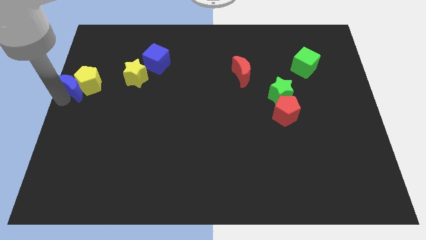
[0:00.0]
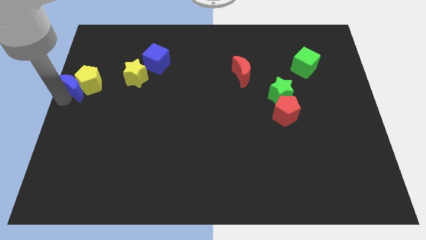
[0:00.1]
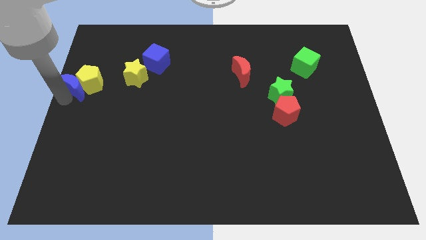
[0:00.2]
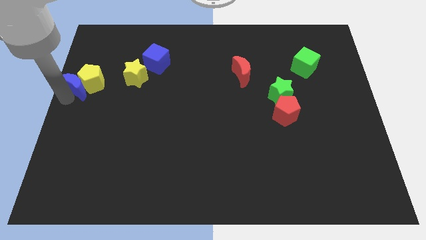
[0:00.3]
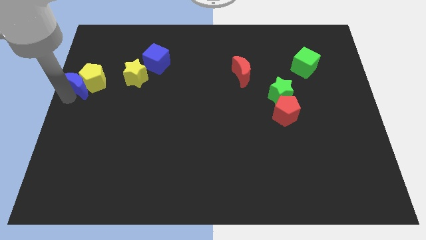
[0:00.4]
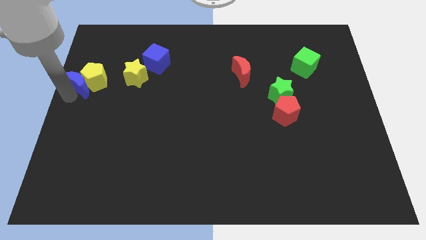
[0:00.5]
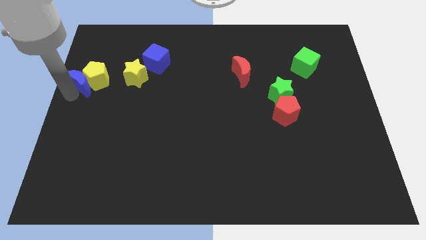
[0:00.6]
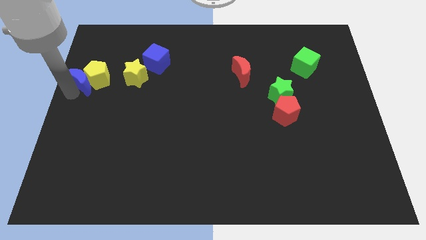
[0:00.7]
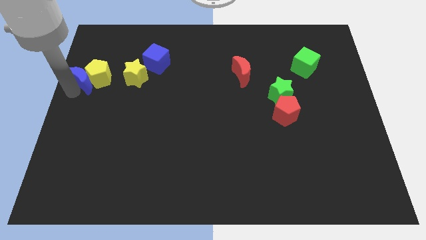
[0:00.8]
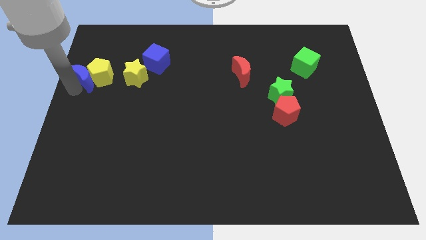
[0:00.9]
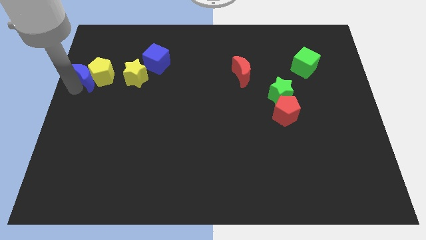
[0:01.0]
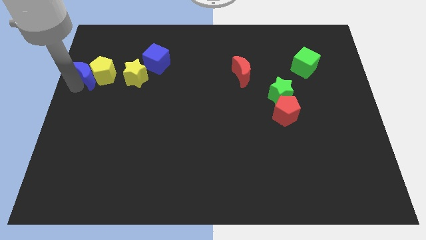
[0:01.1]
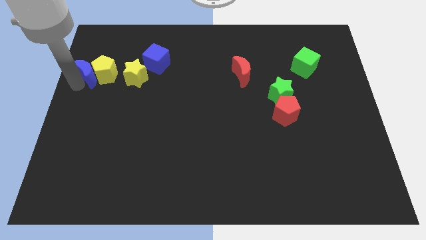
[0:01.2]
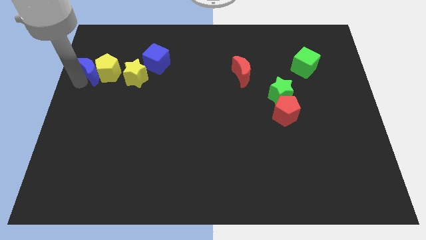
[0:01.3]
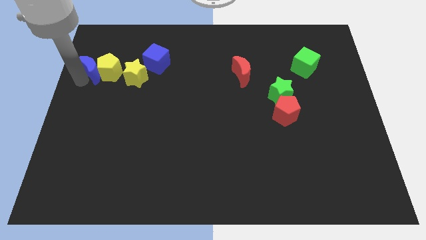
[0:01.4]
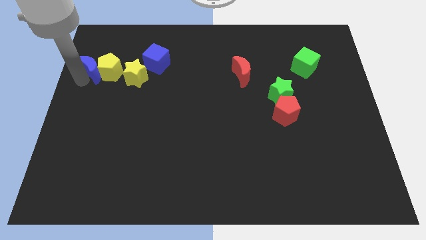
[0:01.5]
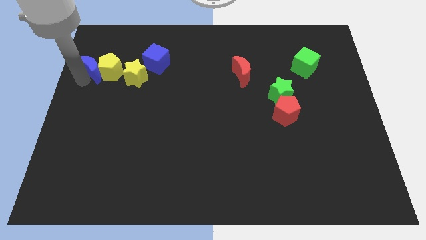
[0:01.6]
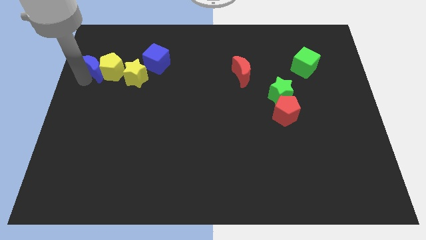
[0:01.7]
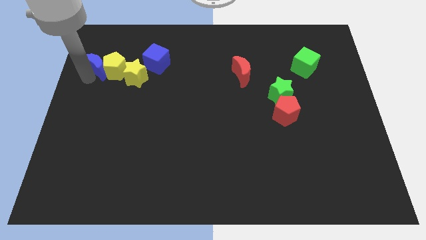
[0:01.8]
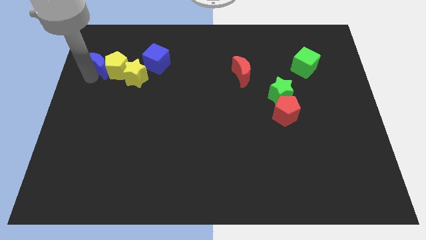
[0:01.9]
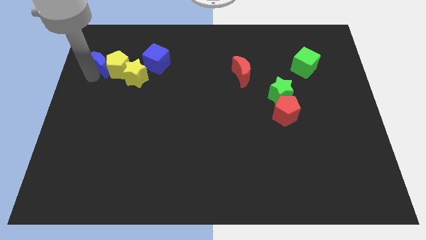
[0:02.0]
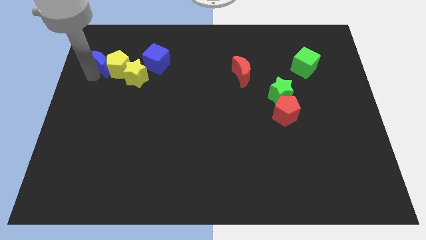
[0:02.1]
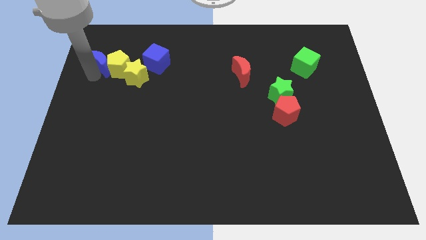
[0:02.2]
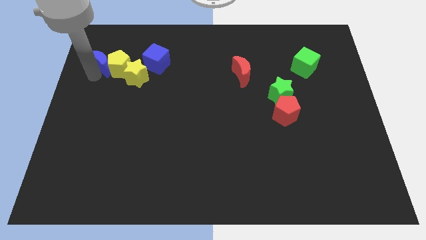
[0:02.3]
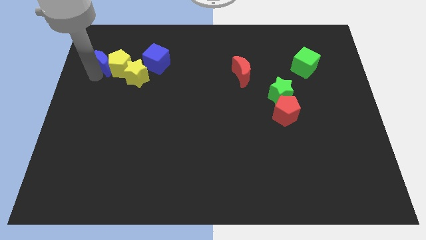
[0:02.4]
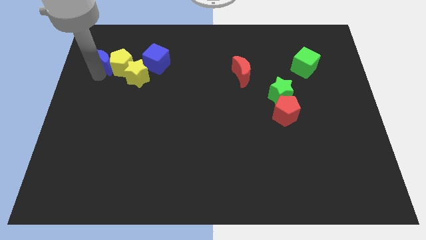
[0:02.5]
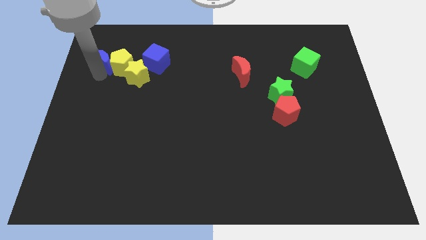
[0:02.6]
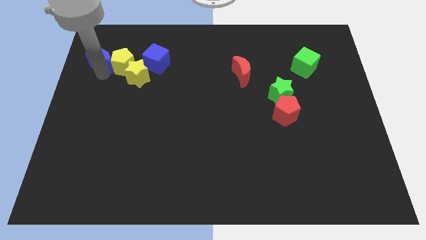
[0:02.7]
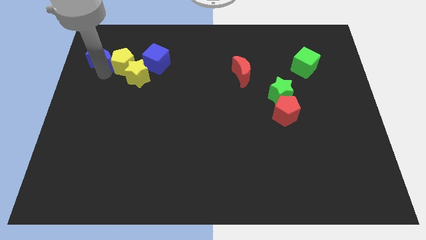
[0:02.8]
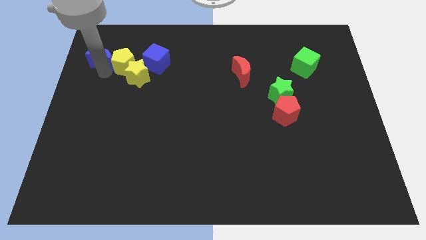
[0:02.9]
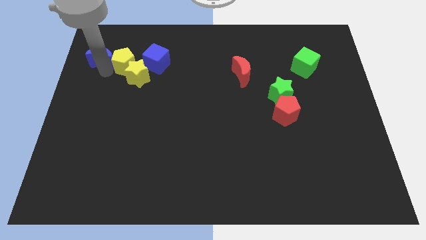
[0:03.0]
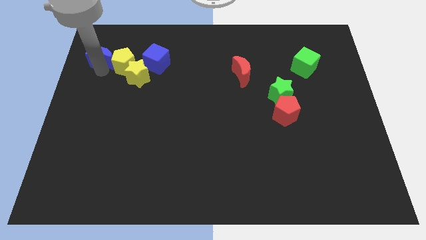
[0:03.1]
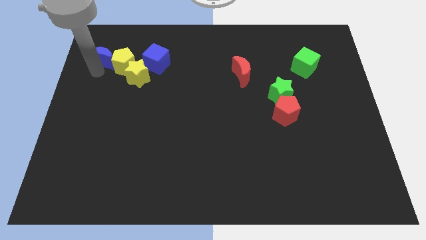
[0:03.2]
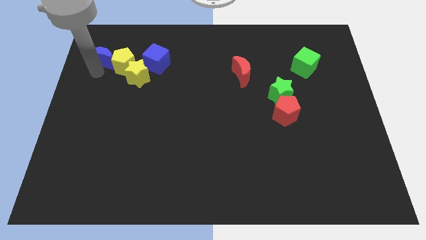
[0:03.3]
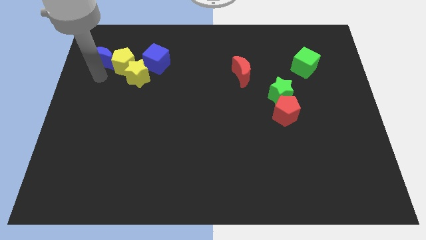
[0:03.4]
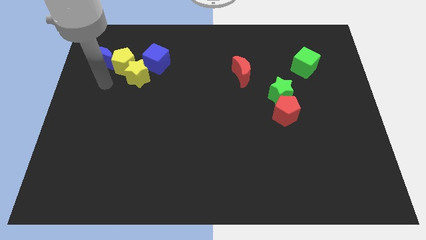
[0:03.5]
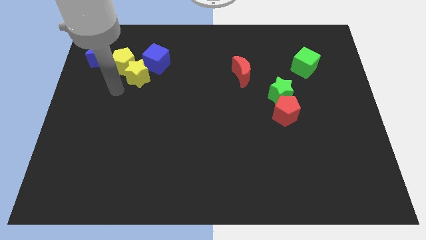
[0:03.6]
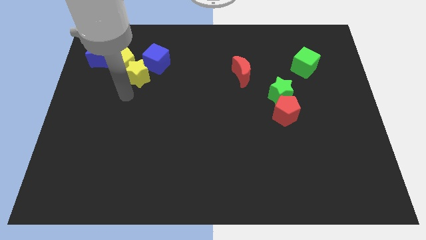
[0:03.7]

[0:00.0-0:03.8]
place the blue moon and yellow pentagon diagonal left of yellow star

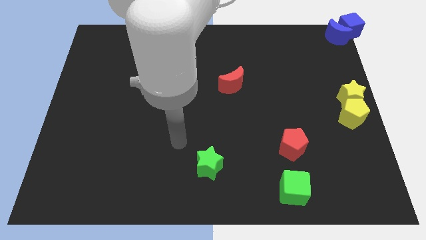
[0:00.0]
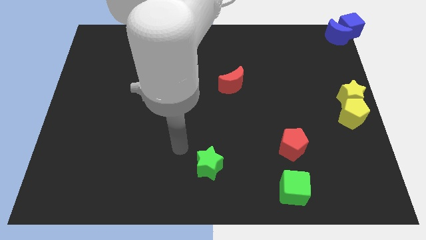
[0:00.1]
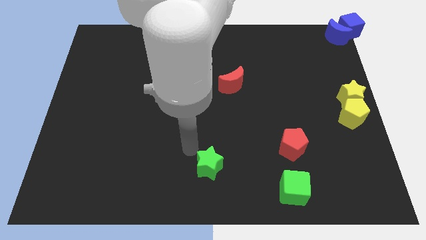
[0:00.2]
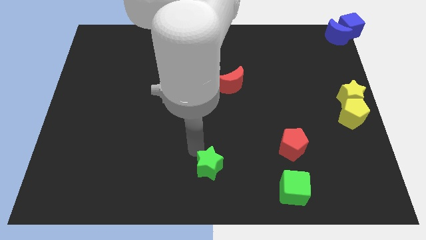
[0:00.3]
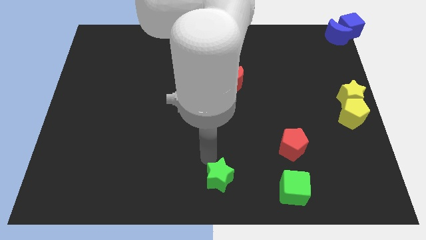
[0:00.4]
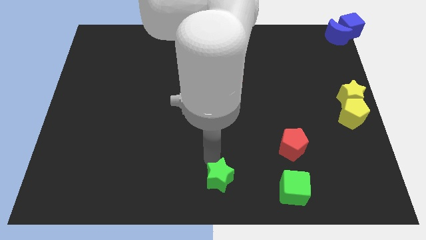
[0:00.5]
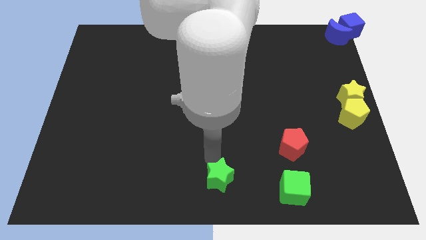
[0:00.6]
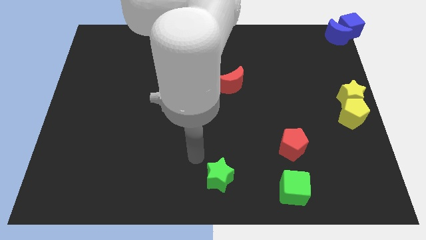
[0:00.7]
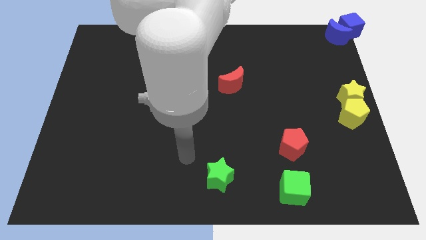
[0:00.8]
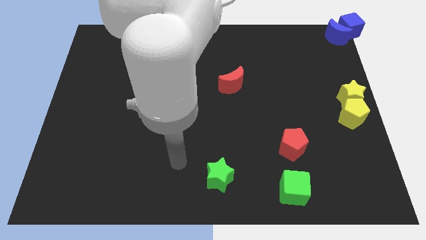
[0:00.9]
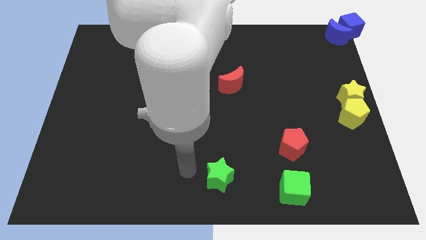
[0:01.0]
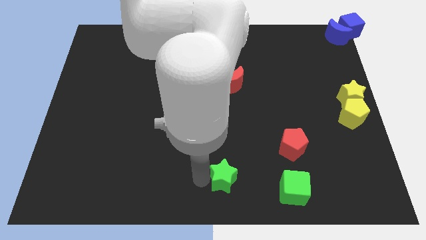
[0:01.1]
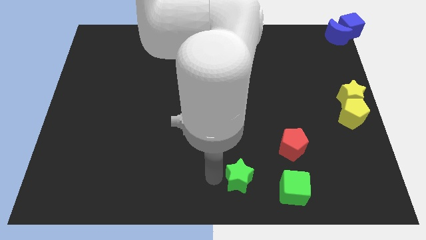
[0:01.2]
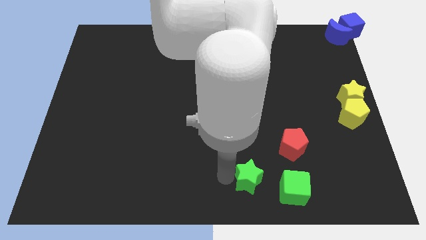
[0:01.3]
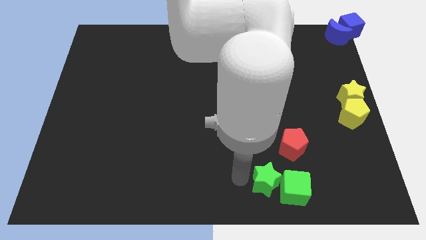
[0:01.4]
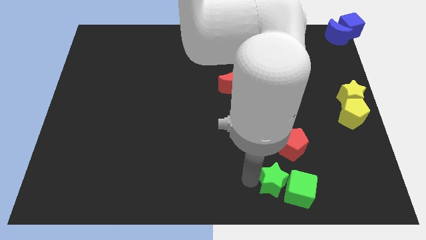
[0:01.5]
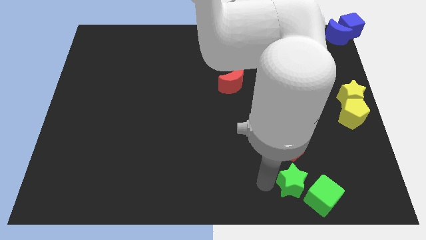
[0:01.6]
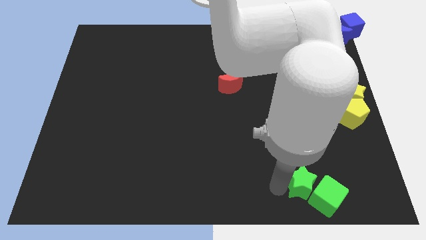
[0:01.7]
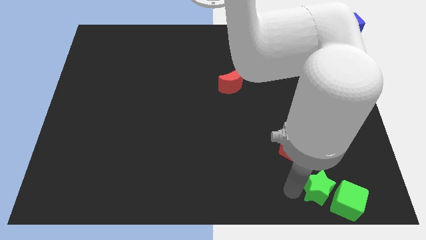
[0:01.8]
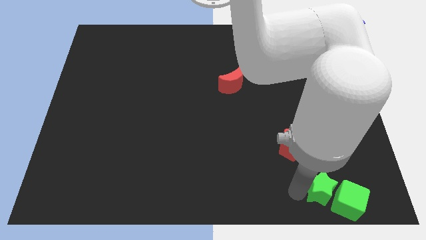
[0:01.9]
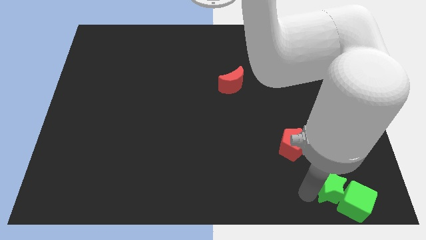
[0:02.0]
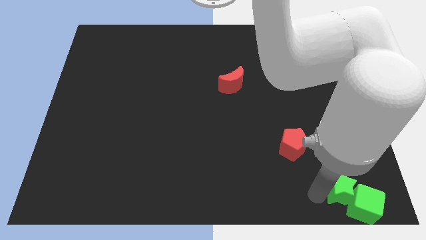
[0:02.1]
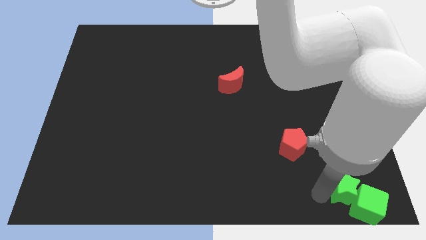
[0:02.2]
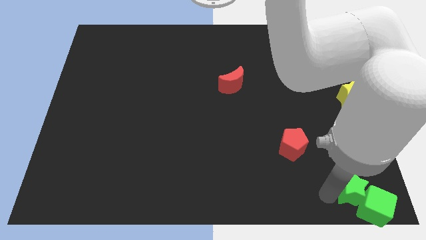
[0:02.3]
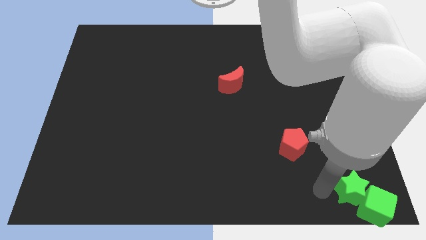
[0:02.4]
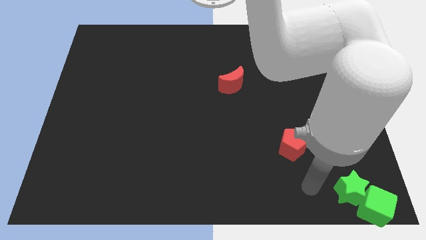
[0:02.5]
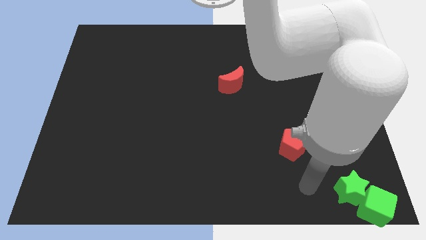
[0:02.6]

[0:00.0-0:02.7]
push the green star along with the green cube to the bottom right corner of the board

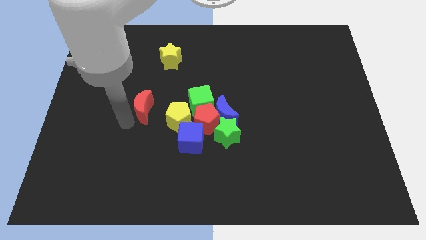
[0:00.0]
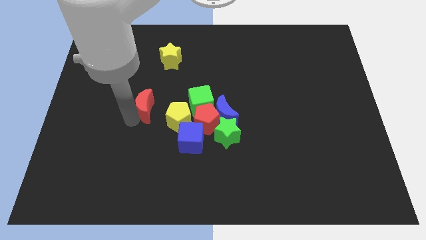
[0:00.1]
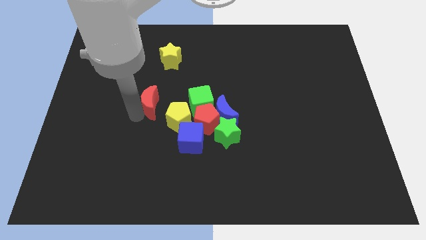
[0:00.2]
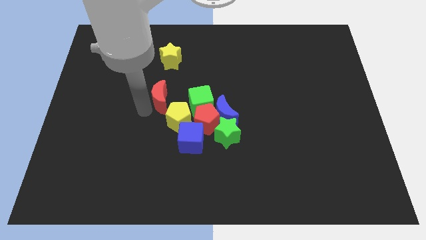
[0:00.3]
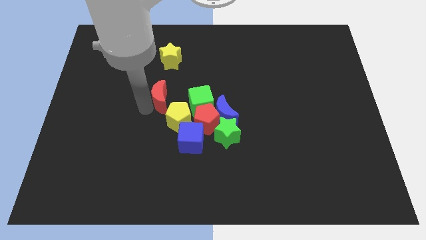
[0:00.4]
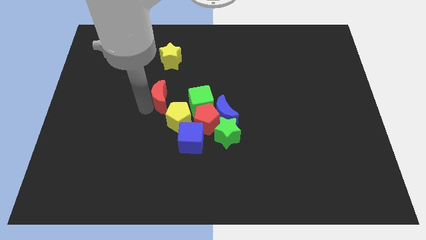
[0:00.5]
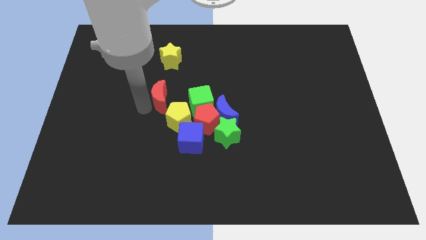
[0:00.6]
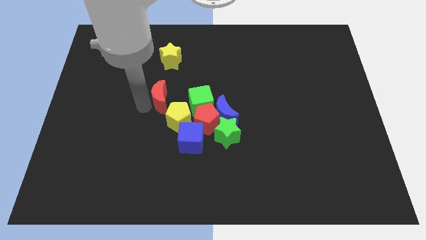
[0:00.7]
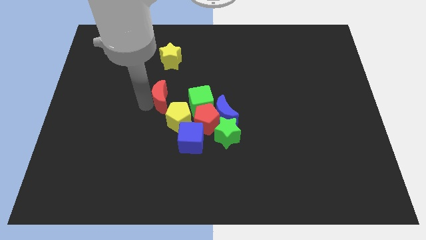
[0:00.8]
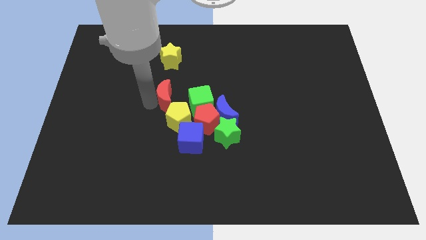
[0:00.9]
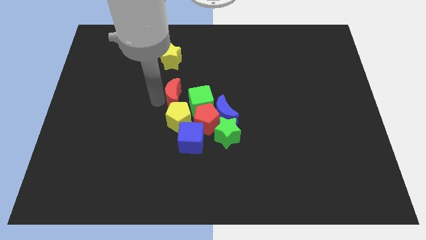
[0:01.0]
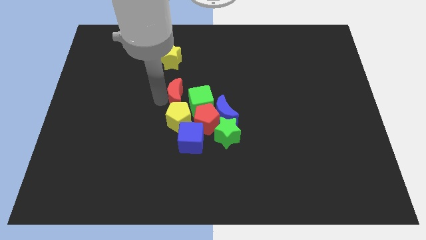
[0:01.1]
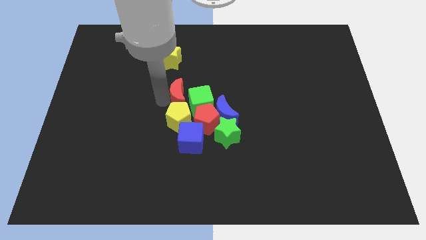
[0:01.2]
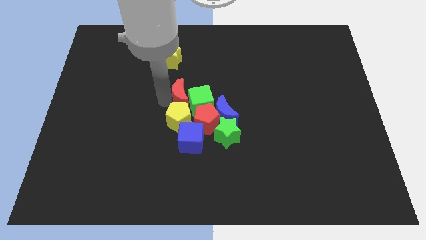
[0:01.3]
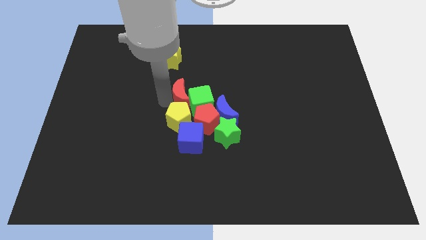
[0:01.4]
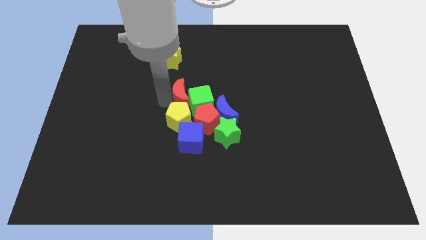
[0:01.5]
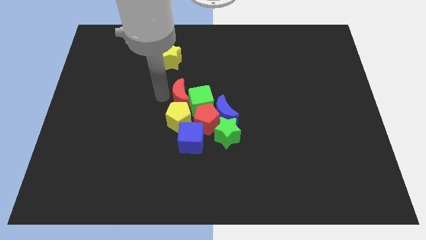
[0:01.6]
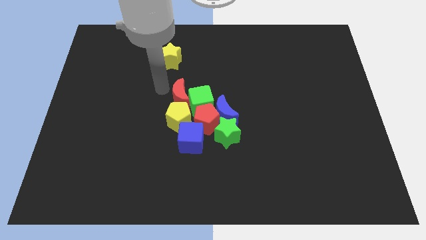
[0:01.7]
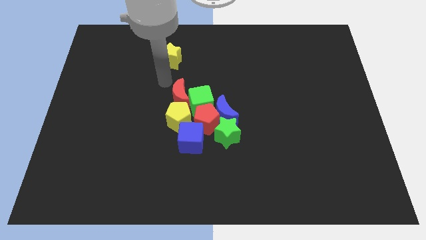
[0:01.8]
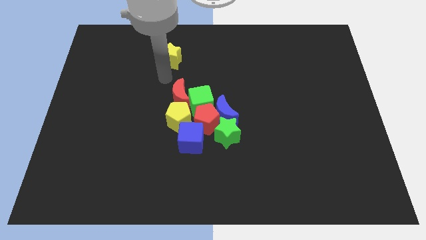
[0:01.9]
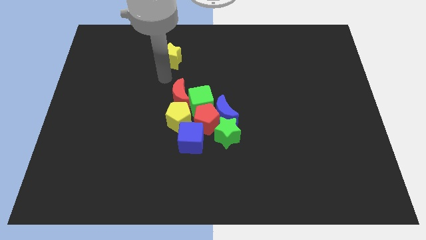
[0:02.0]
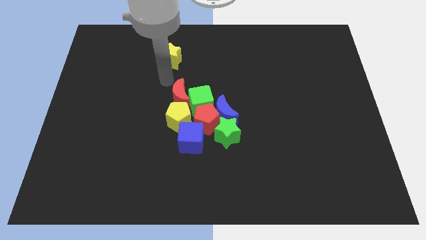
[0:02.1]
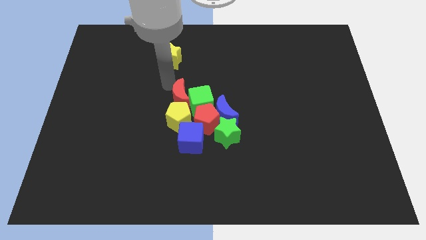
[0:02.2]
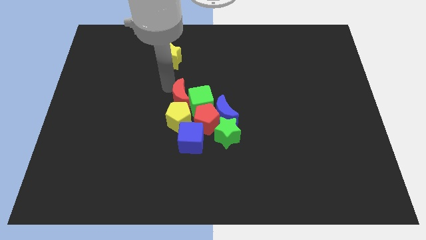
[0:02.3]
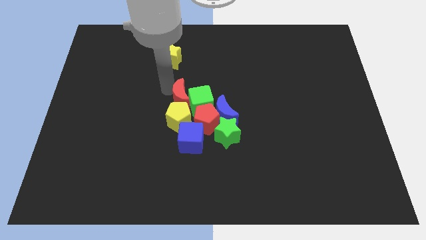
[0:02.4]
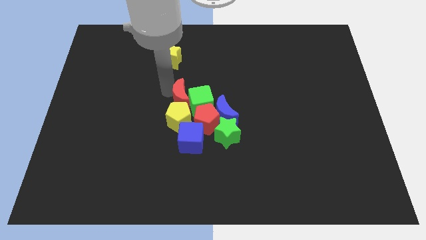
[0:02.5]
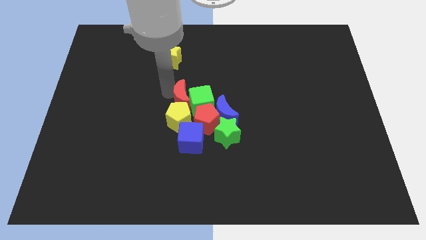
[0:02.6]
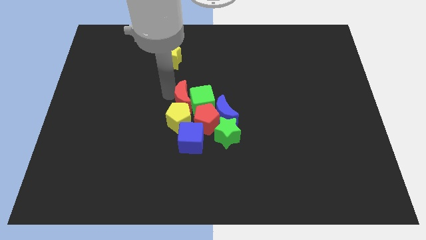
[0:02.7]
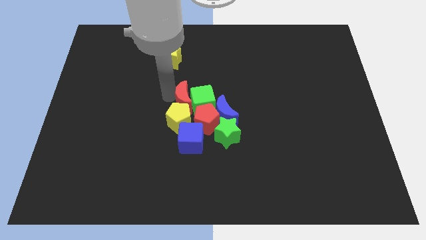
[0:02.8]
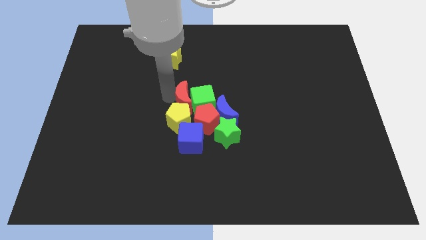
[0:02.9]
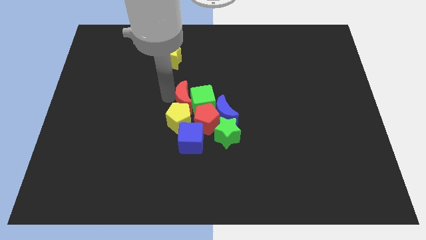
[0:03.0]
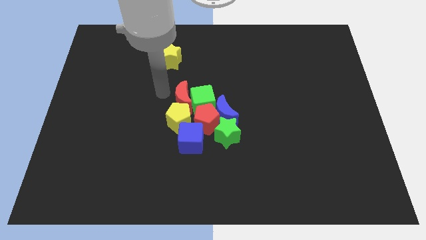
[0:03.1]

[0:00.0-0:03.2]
place the red moon in between the green cube and the yellow pentagon
